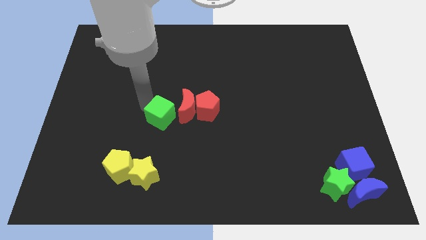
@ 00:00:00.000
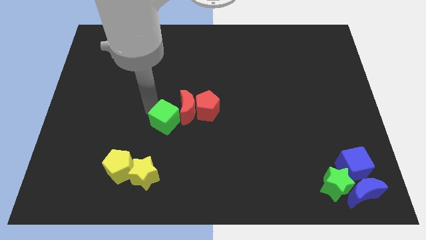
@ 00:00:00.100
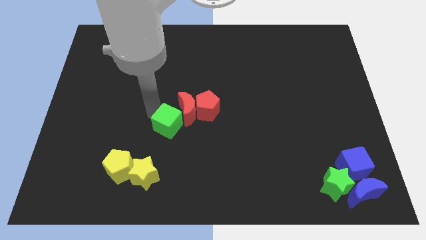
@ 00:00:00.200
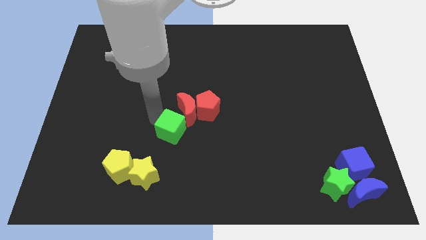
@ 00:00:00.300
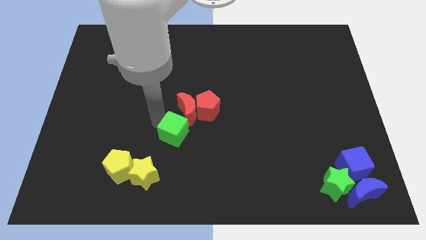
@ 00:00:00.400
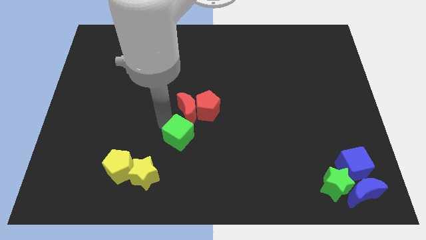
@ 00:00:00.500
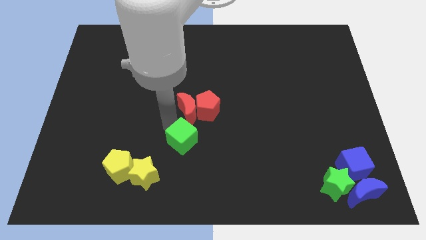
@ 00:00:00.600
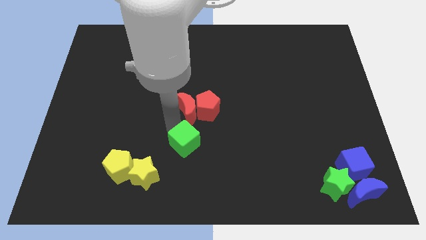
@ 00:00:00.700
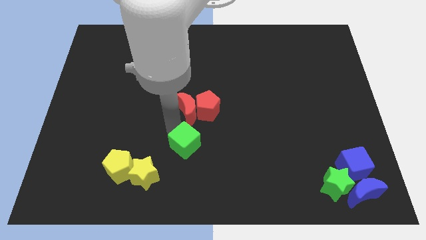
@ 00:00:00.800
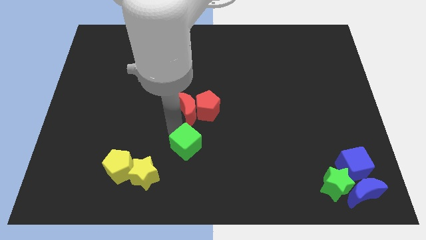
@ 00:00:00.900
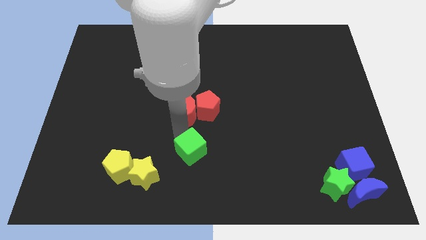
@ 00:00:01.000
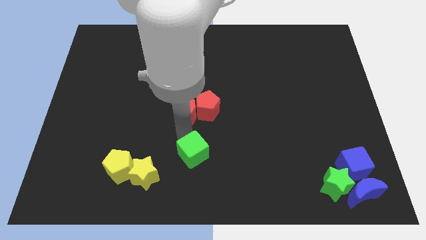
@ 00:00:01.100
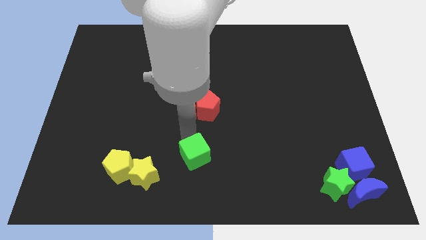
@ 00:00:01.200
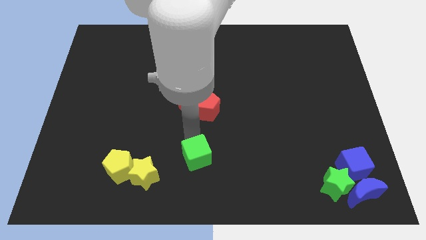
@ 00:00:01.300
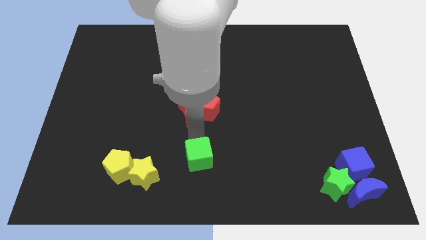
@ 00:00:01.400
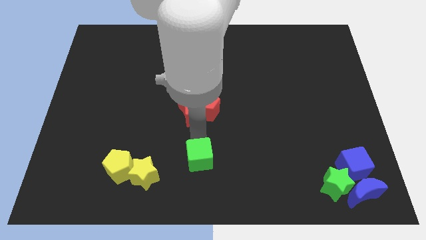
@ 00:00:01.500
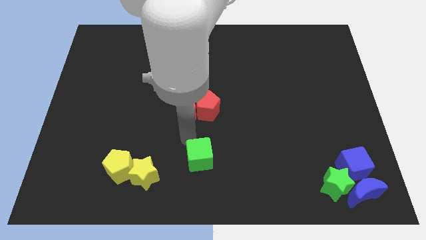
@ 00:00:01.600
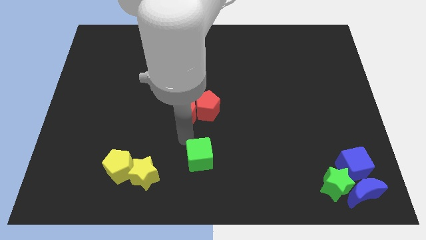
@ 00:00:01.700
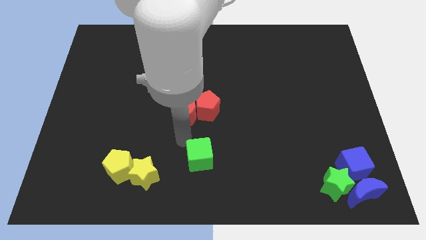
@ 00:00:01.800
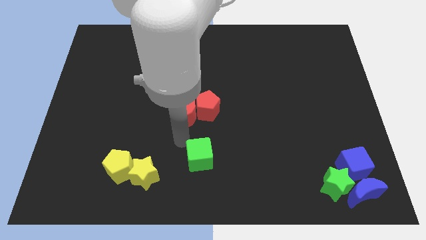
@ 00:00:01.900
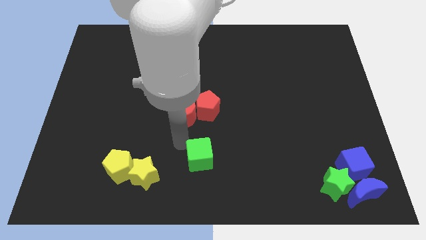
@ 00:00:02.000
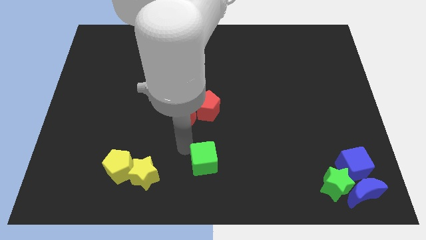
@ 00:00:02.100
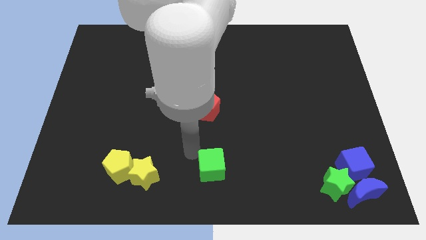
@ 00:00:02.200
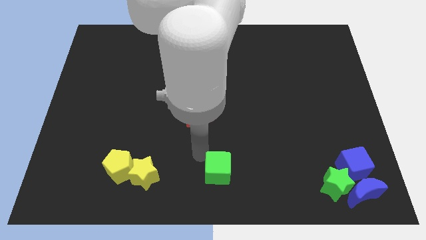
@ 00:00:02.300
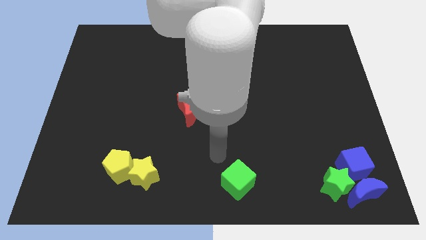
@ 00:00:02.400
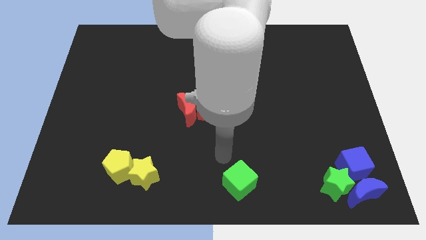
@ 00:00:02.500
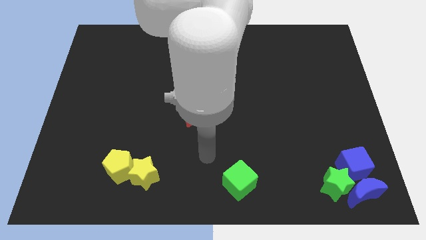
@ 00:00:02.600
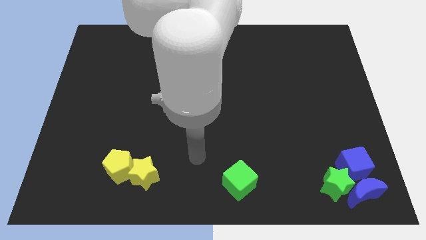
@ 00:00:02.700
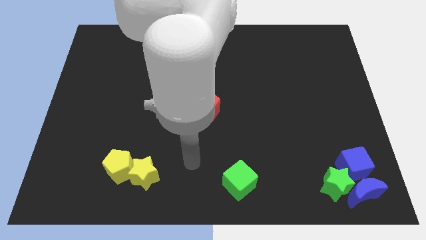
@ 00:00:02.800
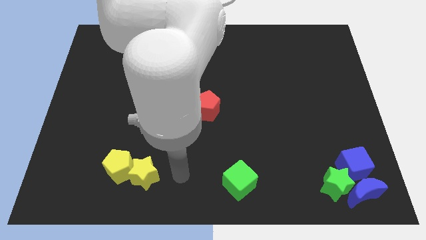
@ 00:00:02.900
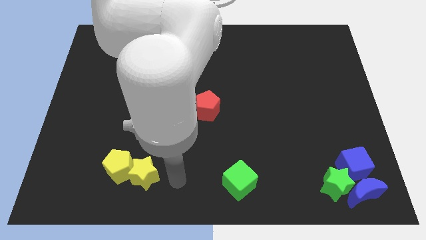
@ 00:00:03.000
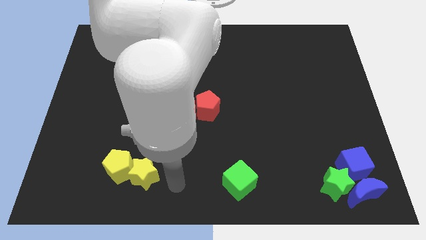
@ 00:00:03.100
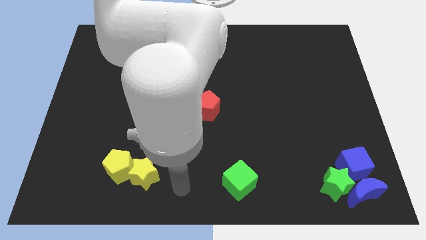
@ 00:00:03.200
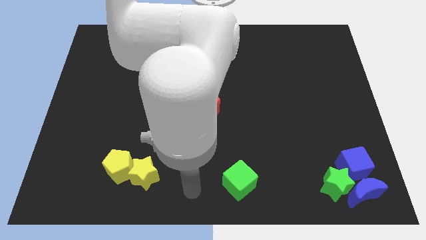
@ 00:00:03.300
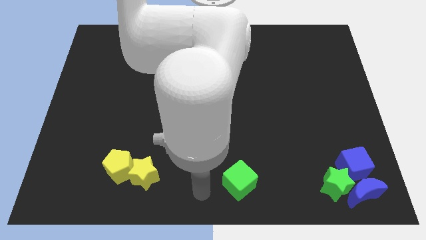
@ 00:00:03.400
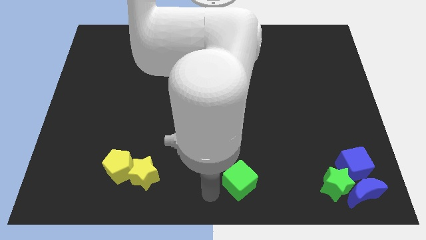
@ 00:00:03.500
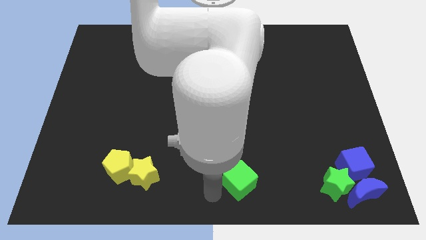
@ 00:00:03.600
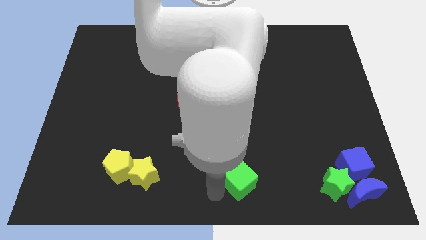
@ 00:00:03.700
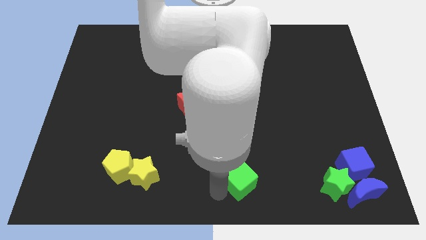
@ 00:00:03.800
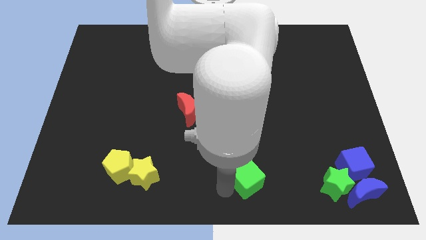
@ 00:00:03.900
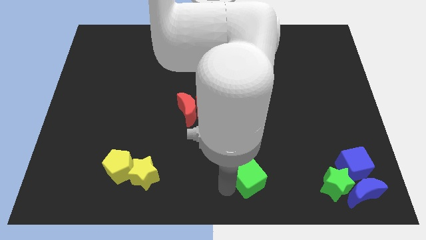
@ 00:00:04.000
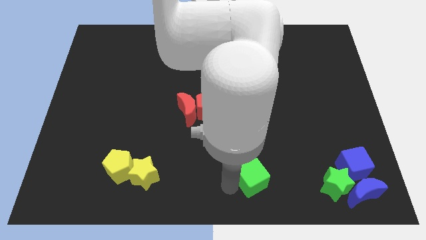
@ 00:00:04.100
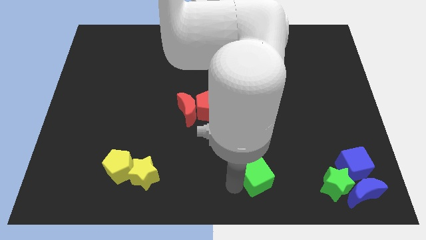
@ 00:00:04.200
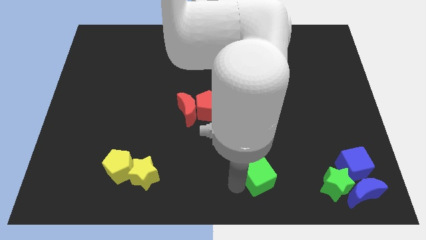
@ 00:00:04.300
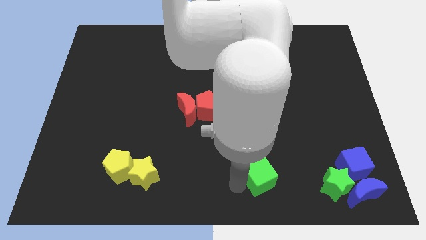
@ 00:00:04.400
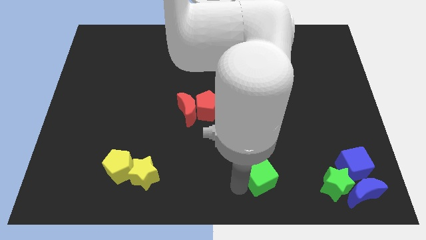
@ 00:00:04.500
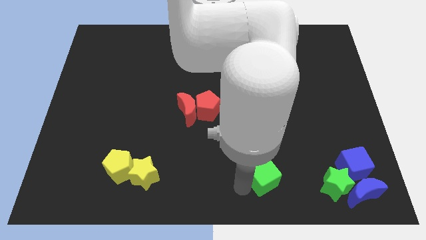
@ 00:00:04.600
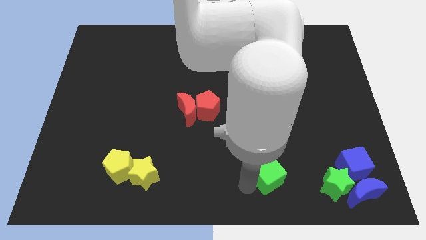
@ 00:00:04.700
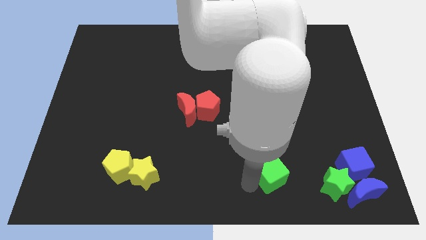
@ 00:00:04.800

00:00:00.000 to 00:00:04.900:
move the green cube slightly to the bottom side of the board

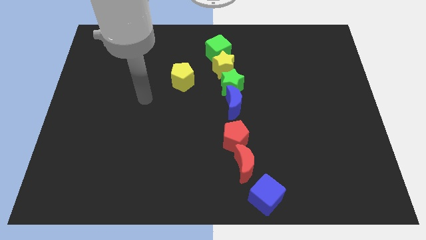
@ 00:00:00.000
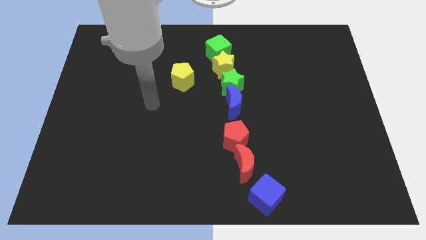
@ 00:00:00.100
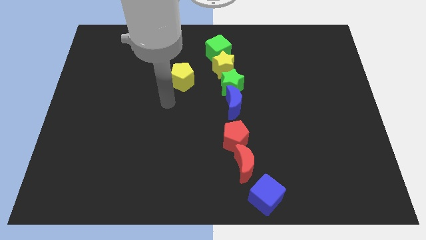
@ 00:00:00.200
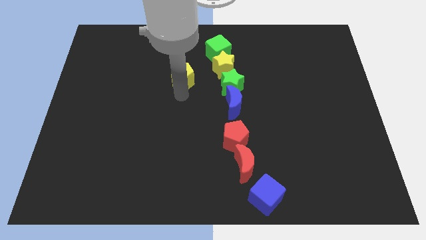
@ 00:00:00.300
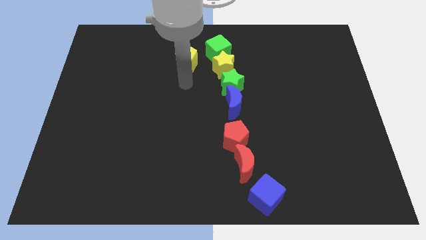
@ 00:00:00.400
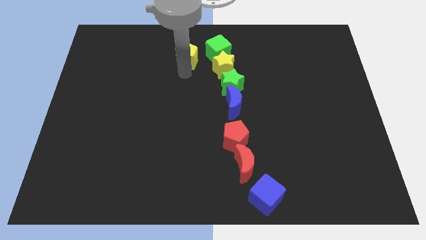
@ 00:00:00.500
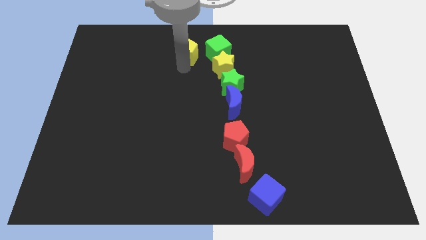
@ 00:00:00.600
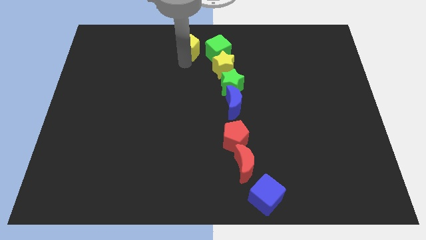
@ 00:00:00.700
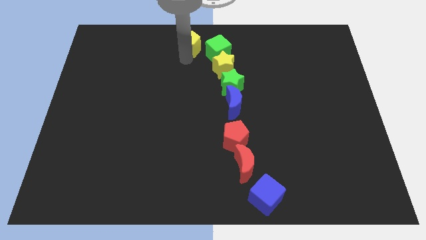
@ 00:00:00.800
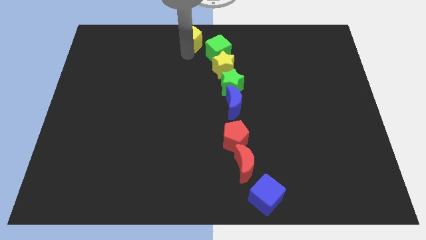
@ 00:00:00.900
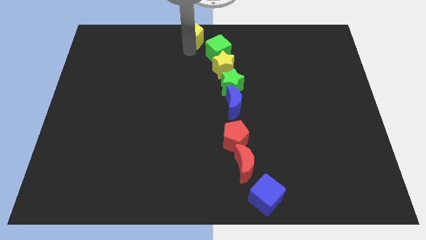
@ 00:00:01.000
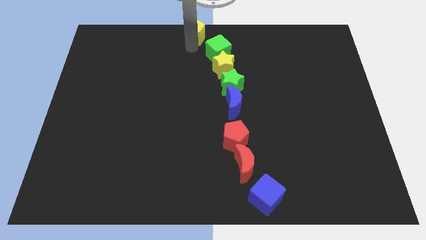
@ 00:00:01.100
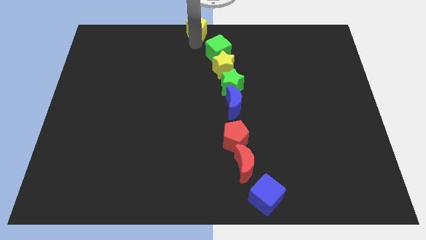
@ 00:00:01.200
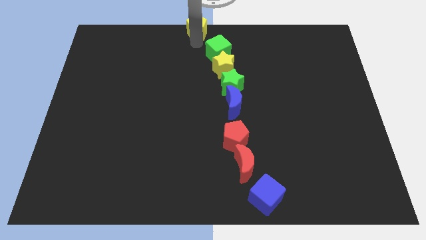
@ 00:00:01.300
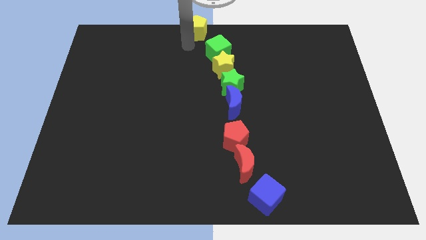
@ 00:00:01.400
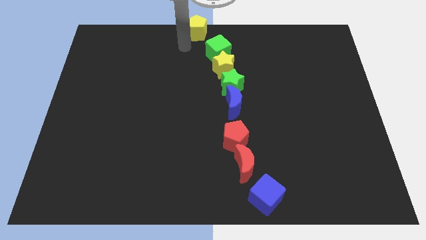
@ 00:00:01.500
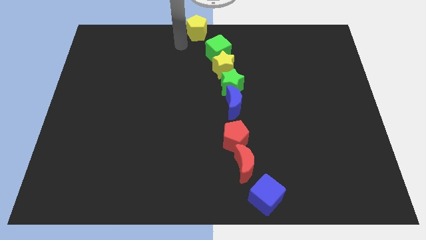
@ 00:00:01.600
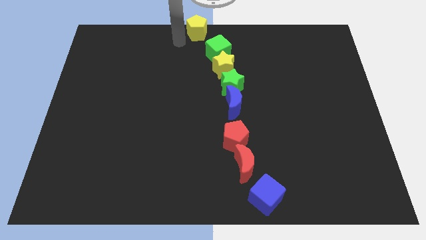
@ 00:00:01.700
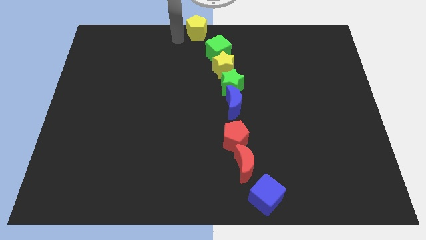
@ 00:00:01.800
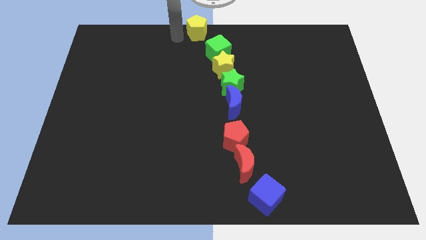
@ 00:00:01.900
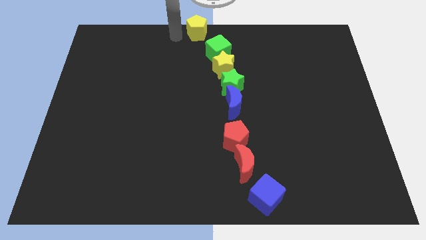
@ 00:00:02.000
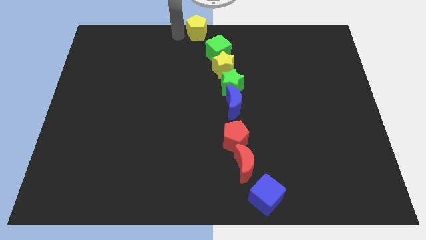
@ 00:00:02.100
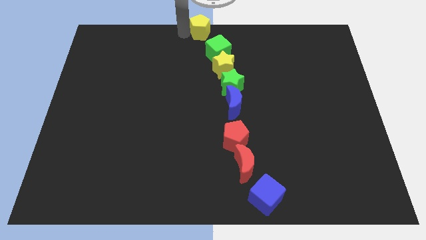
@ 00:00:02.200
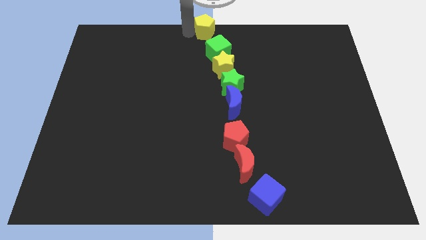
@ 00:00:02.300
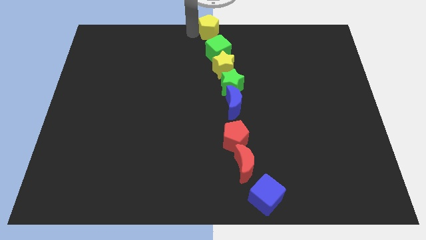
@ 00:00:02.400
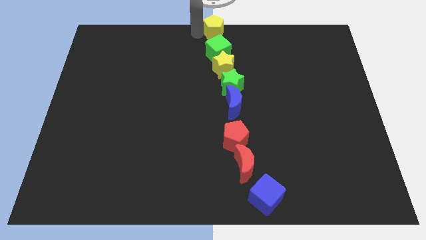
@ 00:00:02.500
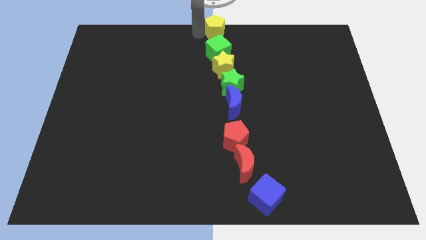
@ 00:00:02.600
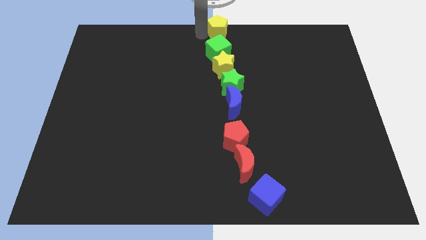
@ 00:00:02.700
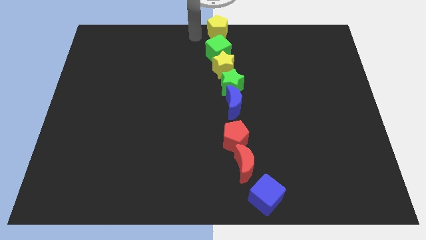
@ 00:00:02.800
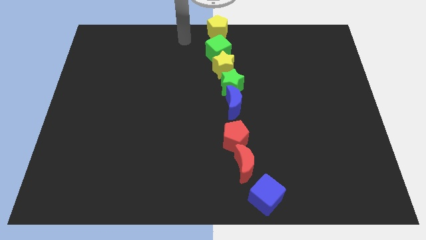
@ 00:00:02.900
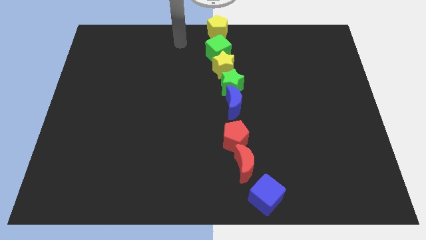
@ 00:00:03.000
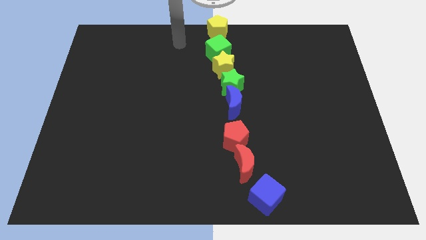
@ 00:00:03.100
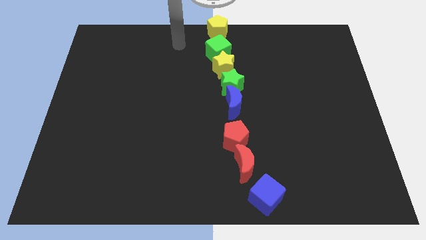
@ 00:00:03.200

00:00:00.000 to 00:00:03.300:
push the yellow pentagon above the green cube

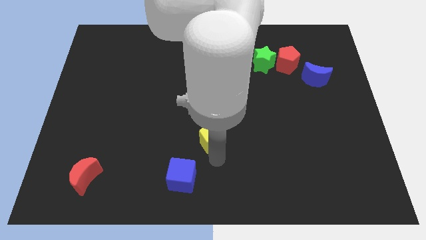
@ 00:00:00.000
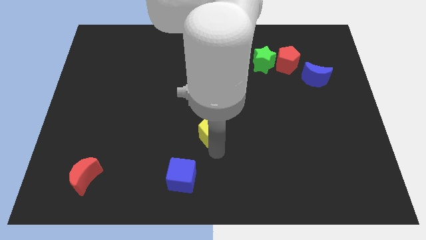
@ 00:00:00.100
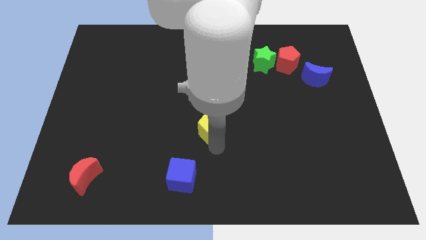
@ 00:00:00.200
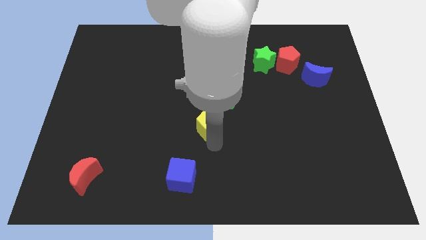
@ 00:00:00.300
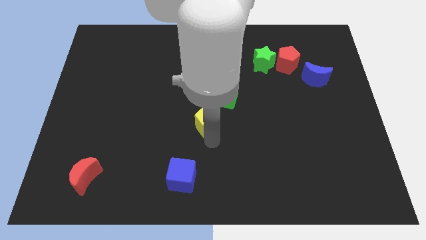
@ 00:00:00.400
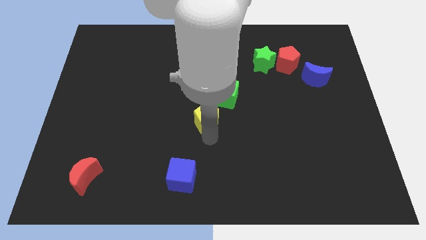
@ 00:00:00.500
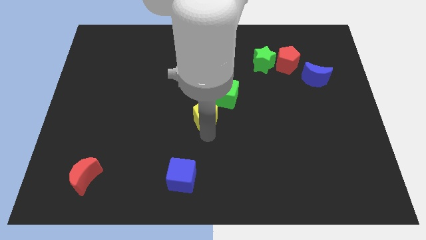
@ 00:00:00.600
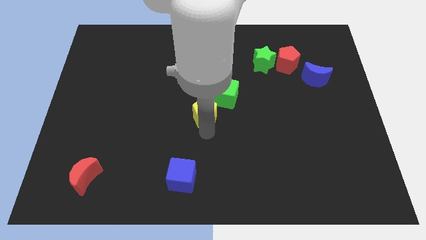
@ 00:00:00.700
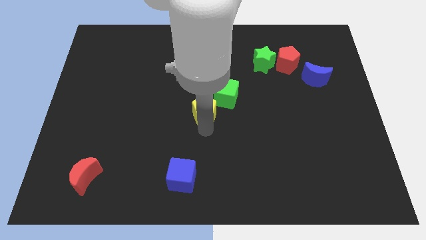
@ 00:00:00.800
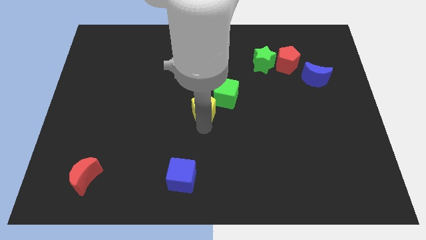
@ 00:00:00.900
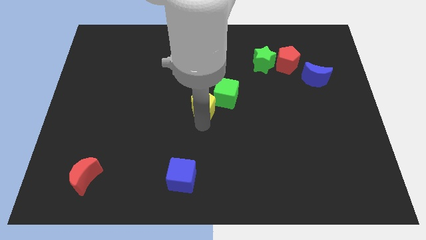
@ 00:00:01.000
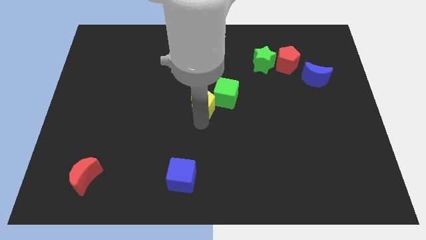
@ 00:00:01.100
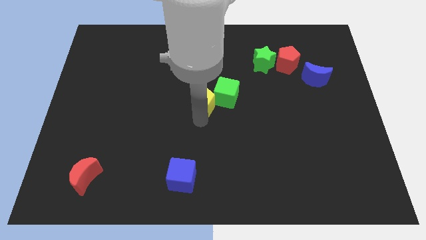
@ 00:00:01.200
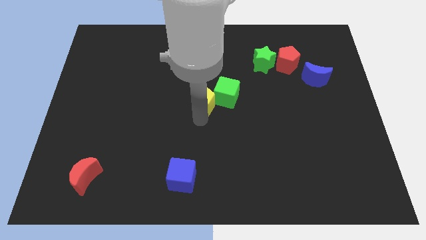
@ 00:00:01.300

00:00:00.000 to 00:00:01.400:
push the yellow pentagon into green cube
